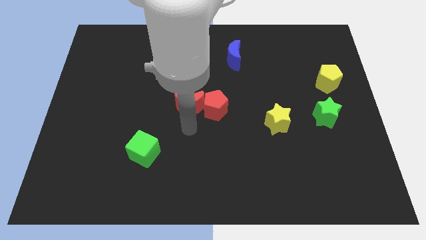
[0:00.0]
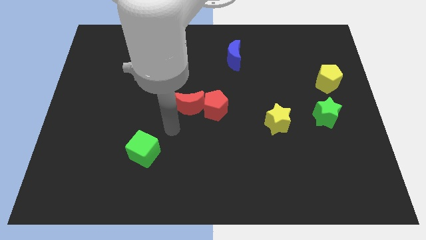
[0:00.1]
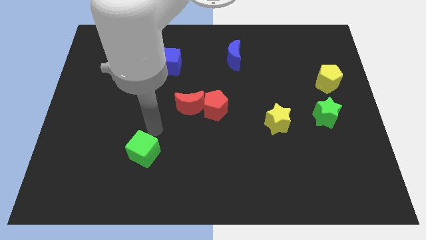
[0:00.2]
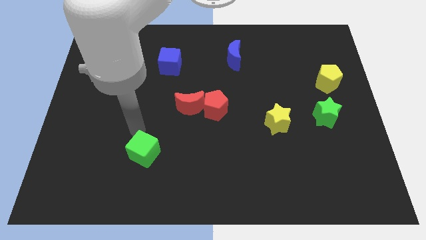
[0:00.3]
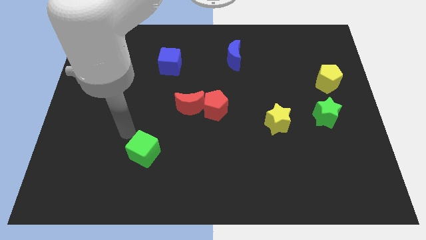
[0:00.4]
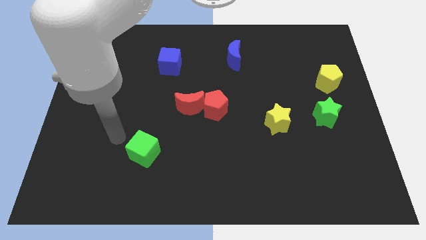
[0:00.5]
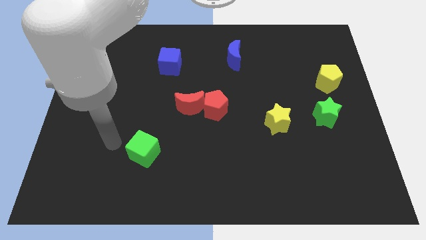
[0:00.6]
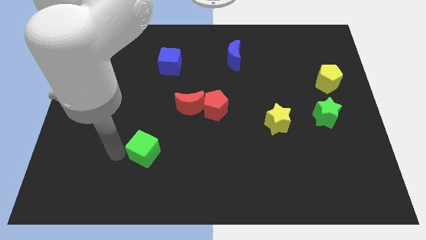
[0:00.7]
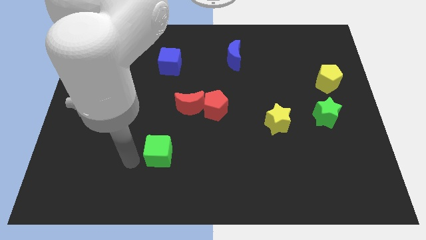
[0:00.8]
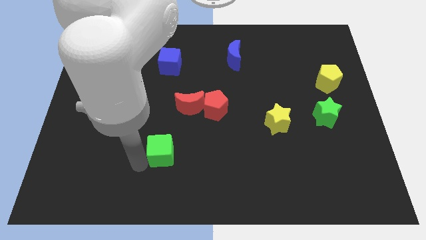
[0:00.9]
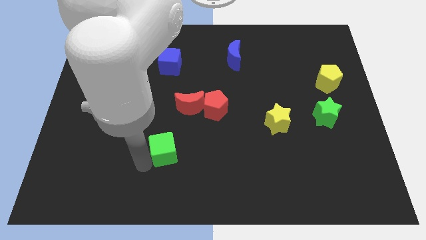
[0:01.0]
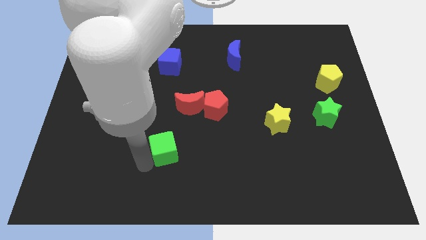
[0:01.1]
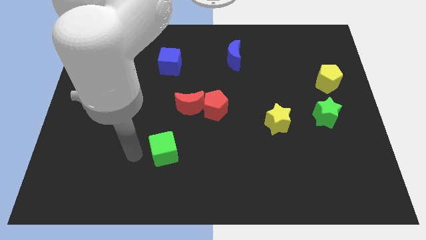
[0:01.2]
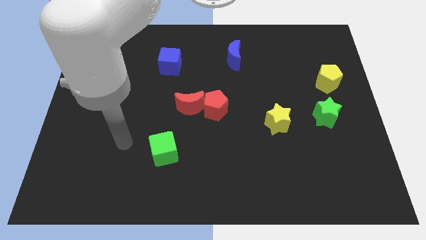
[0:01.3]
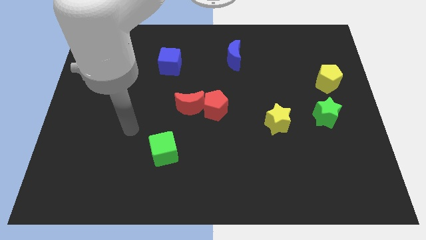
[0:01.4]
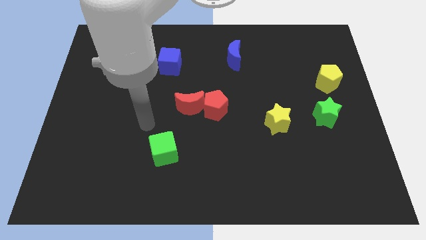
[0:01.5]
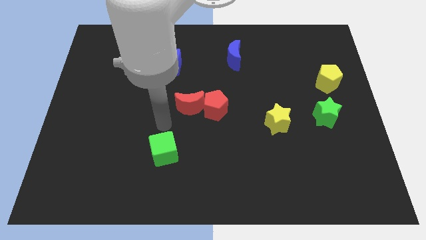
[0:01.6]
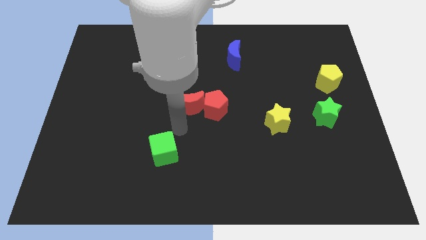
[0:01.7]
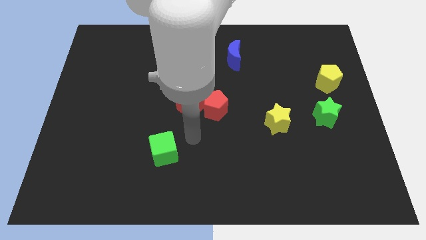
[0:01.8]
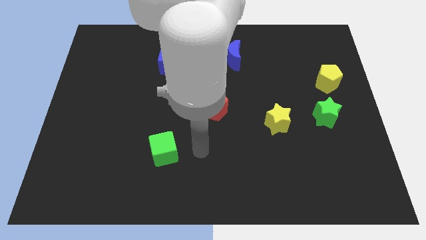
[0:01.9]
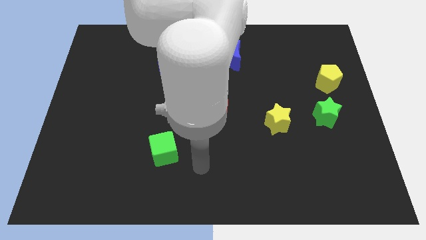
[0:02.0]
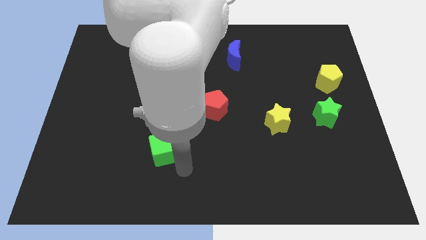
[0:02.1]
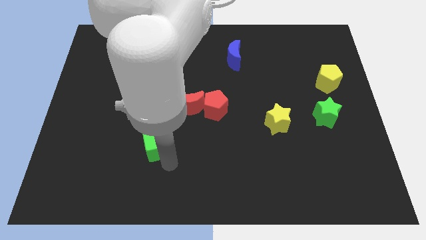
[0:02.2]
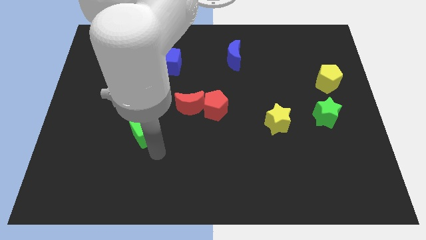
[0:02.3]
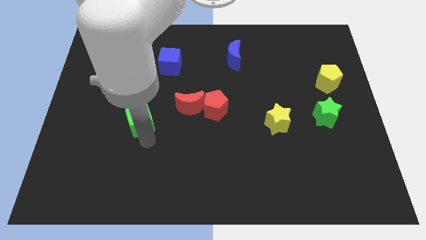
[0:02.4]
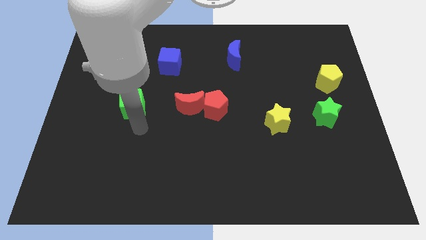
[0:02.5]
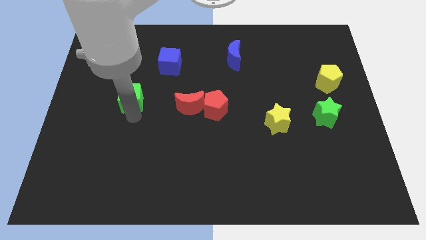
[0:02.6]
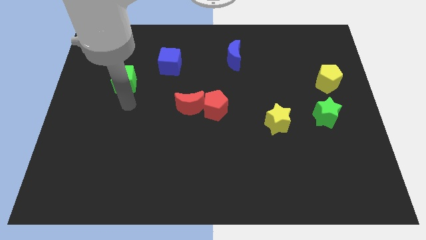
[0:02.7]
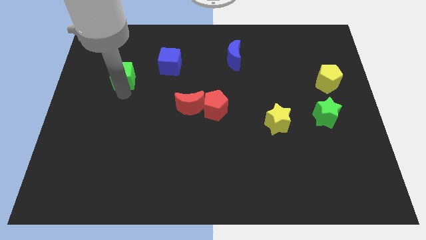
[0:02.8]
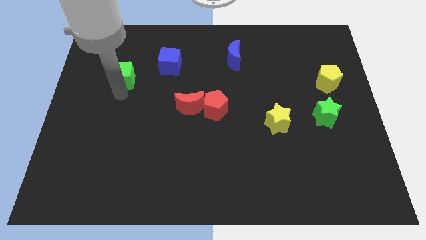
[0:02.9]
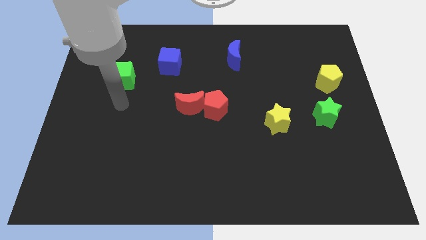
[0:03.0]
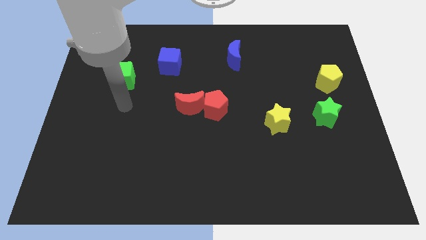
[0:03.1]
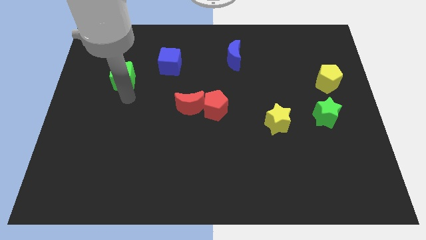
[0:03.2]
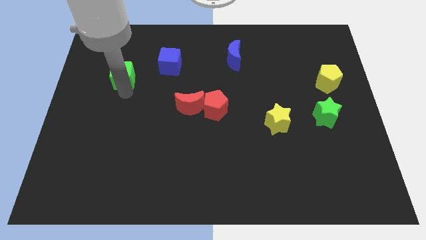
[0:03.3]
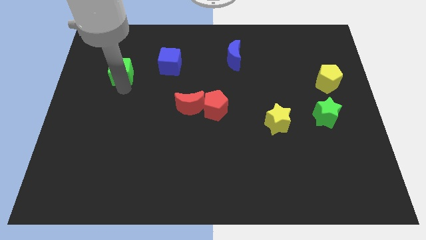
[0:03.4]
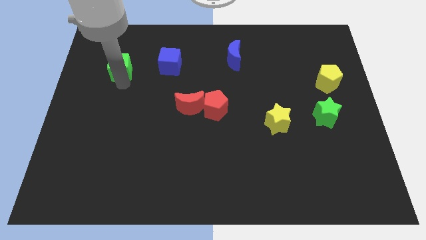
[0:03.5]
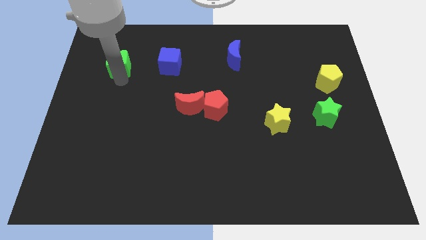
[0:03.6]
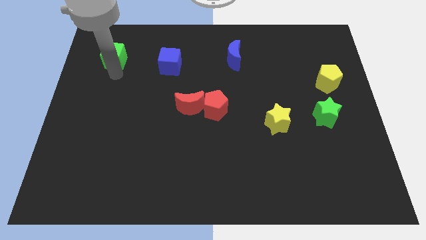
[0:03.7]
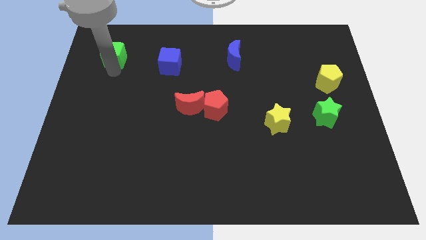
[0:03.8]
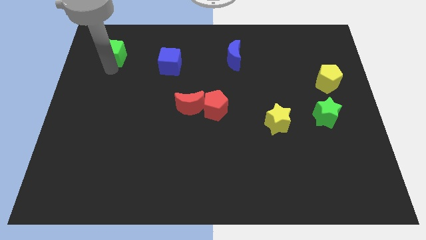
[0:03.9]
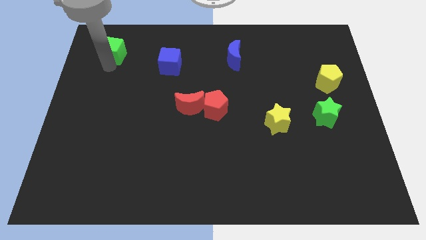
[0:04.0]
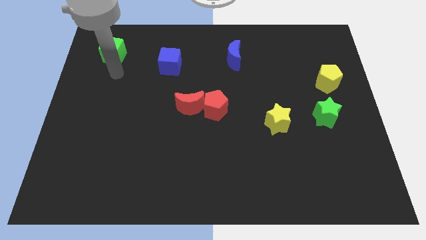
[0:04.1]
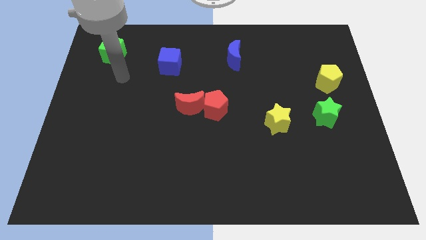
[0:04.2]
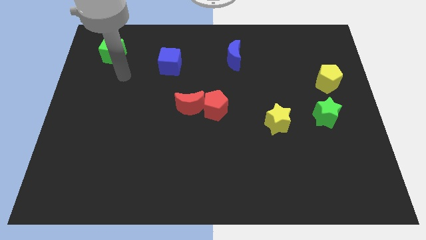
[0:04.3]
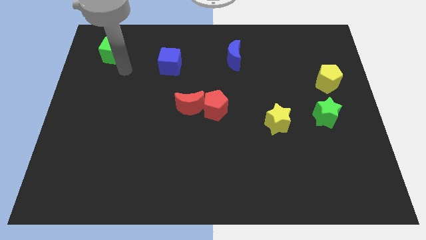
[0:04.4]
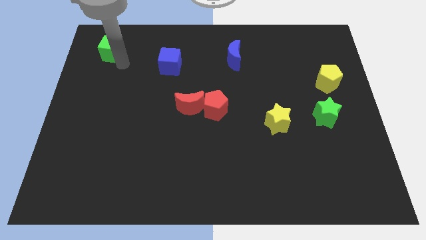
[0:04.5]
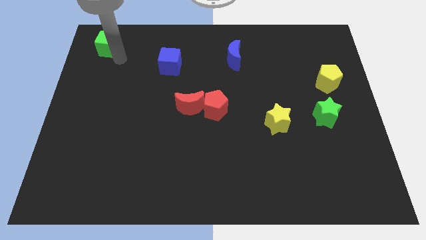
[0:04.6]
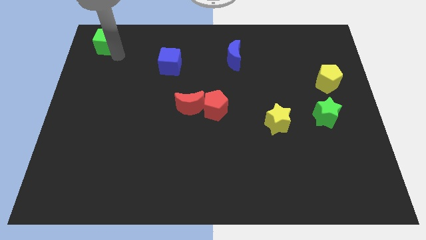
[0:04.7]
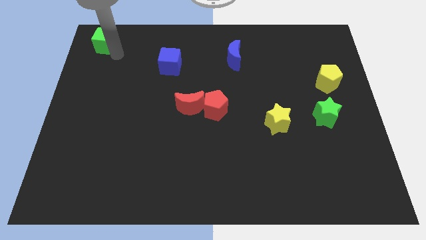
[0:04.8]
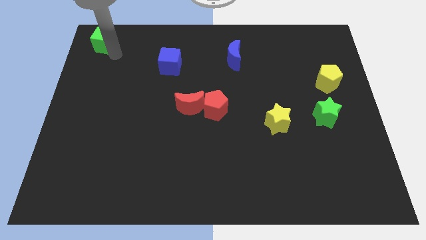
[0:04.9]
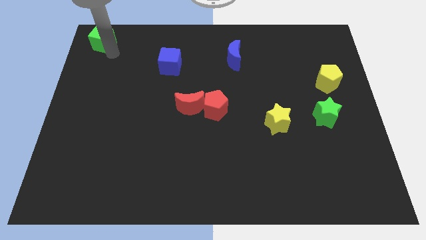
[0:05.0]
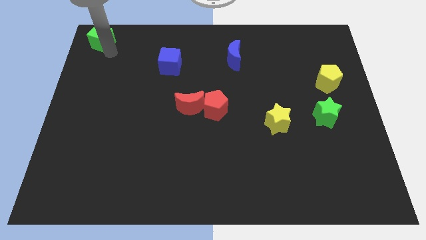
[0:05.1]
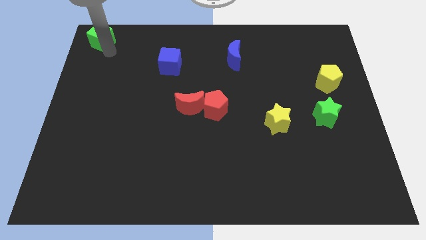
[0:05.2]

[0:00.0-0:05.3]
drag the green cube to the top left corner of the board

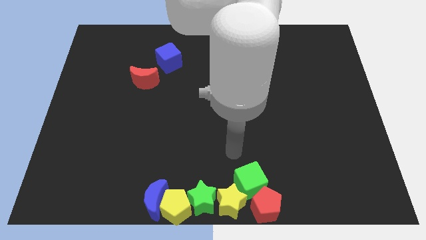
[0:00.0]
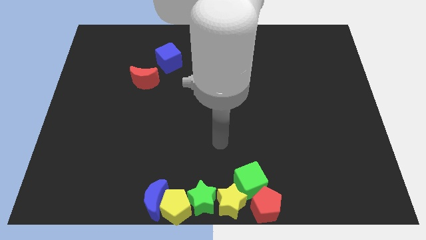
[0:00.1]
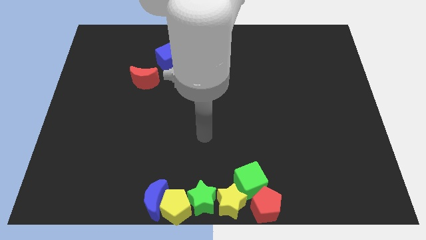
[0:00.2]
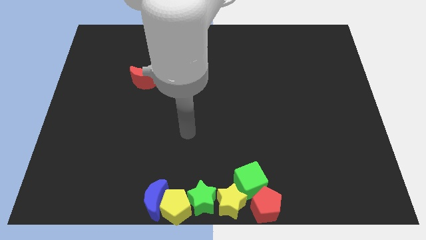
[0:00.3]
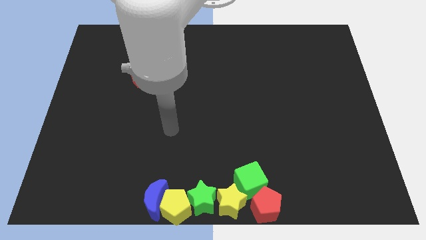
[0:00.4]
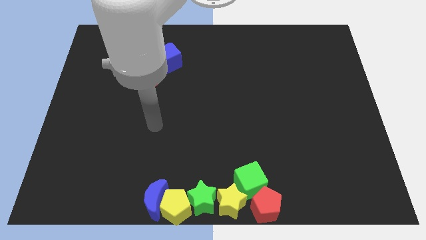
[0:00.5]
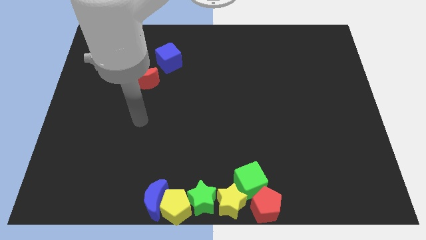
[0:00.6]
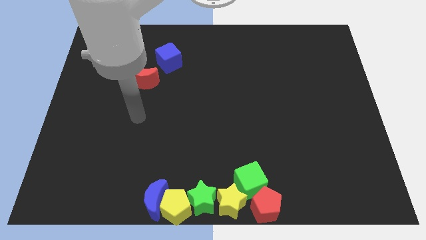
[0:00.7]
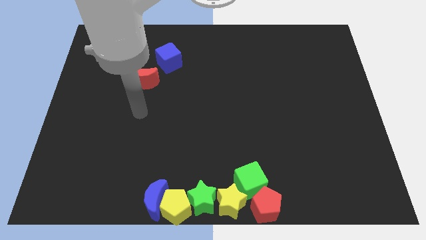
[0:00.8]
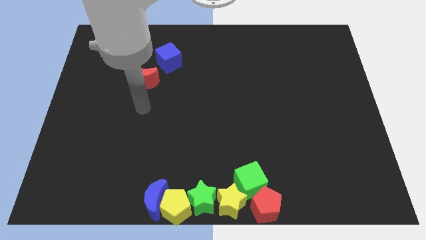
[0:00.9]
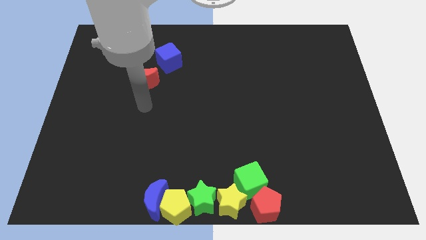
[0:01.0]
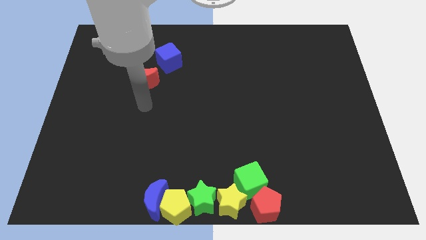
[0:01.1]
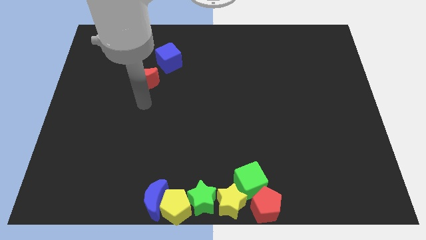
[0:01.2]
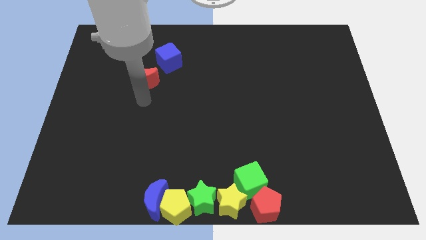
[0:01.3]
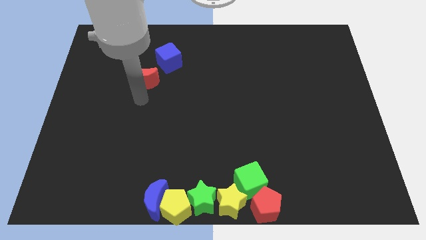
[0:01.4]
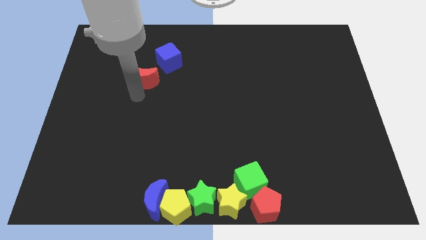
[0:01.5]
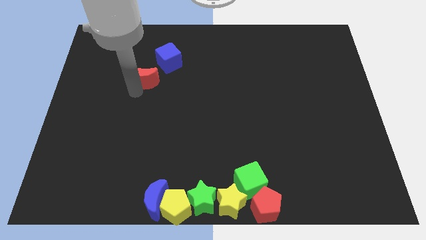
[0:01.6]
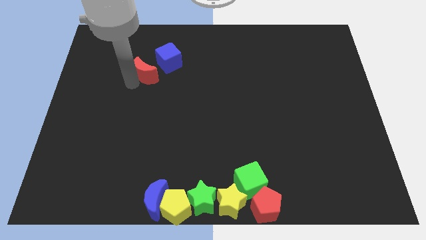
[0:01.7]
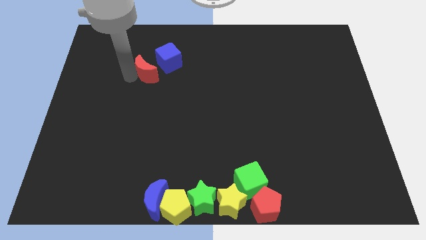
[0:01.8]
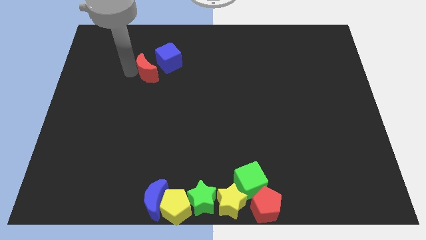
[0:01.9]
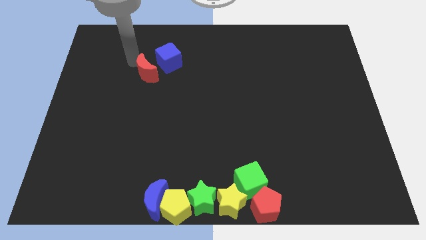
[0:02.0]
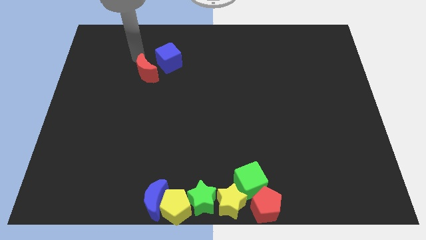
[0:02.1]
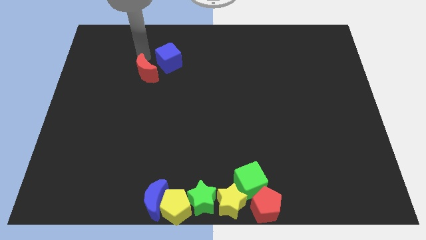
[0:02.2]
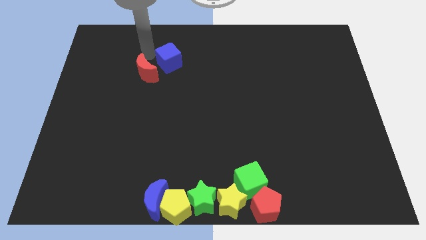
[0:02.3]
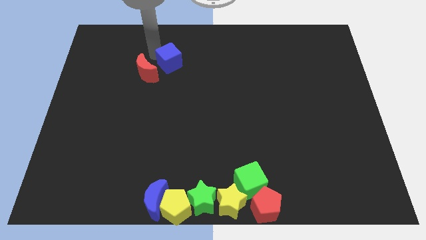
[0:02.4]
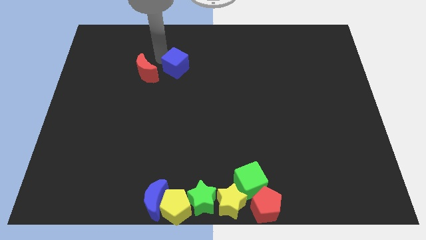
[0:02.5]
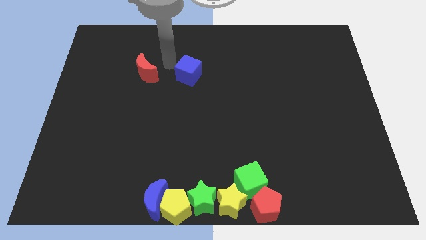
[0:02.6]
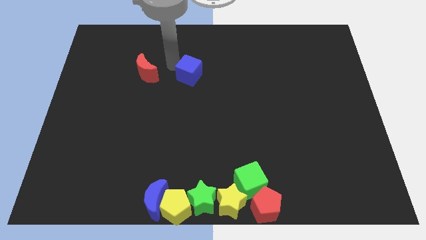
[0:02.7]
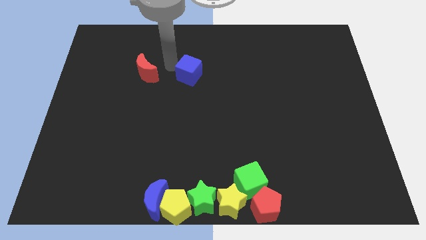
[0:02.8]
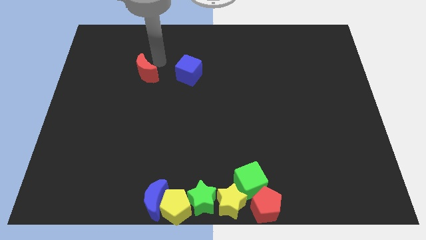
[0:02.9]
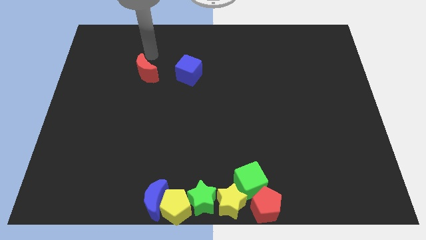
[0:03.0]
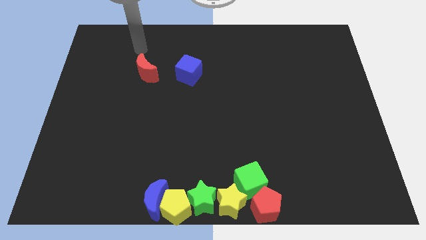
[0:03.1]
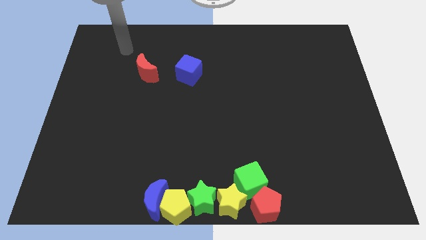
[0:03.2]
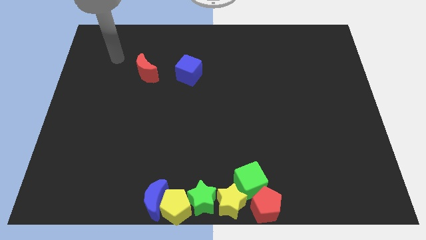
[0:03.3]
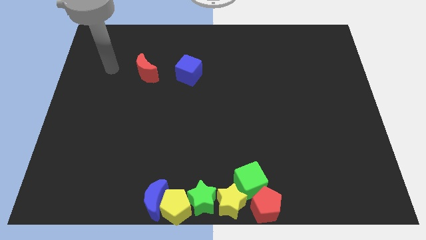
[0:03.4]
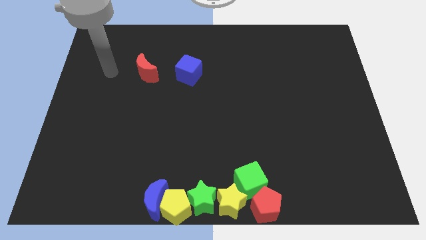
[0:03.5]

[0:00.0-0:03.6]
push the blue cube towards right

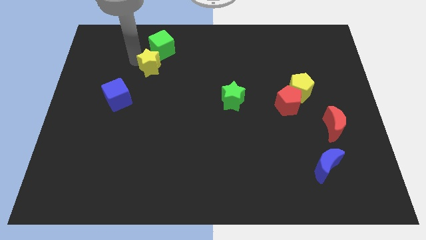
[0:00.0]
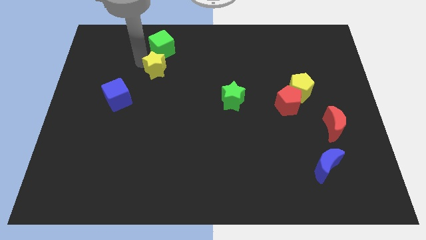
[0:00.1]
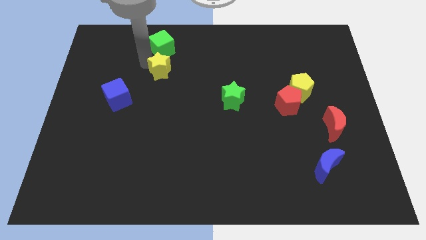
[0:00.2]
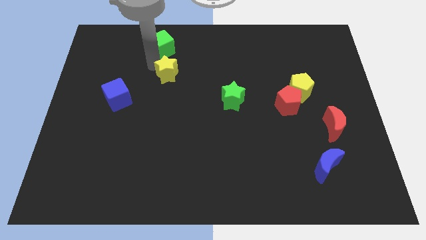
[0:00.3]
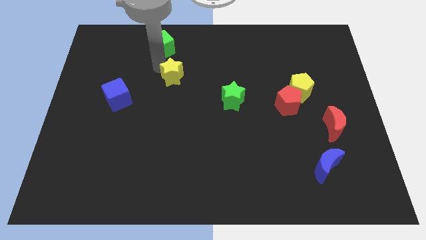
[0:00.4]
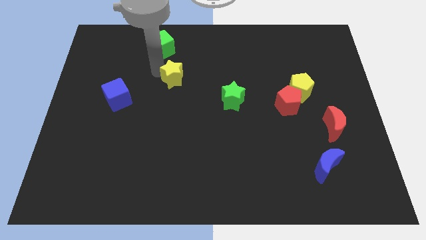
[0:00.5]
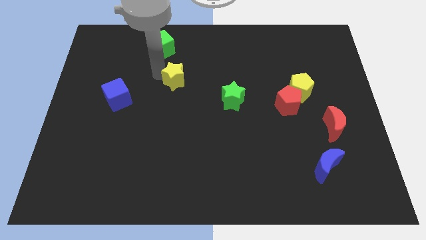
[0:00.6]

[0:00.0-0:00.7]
separate the green cube and yellow star
